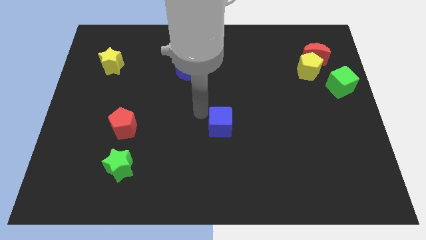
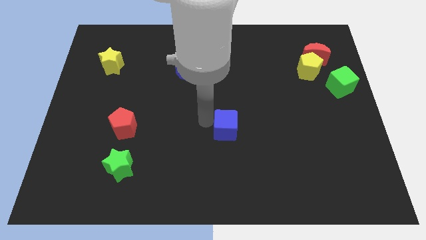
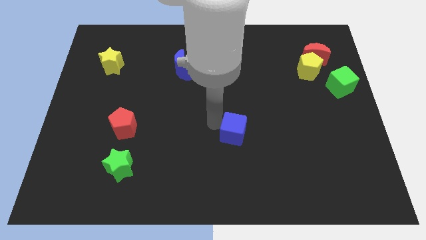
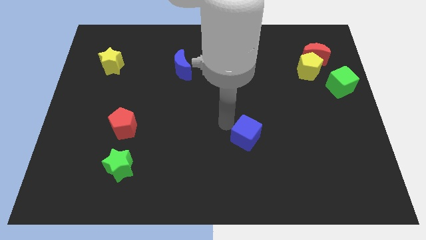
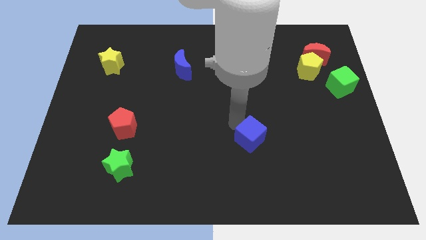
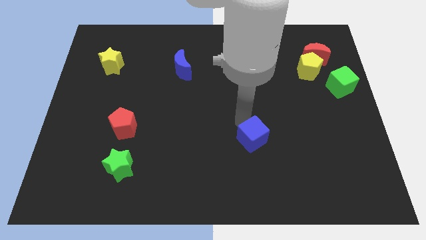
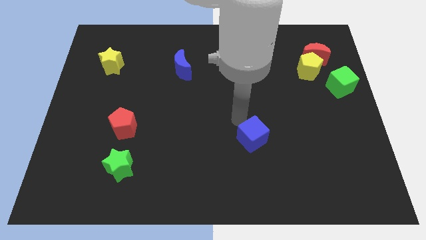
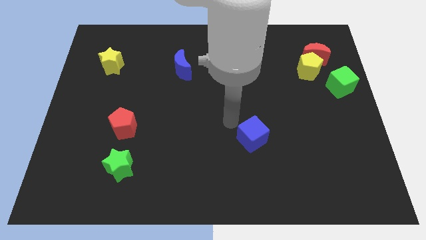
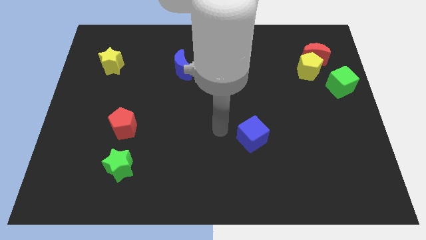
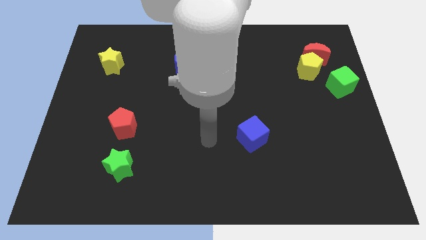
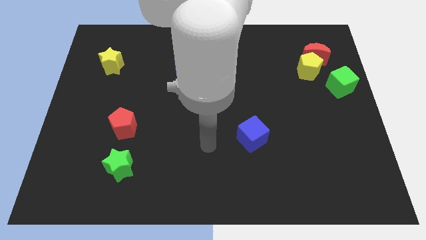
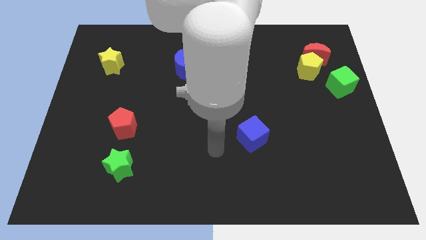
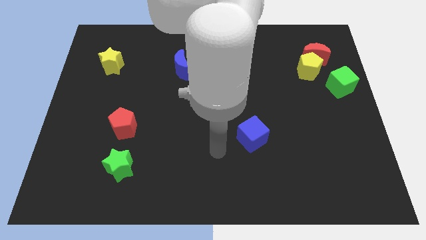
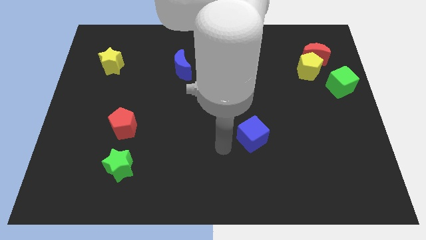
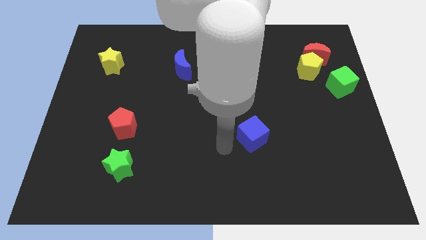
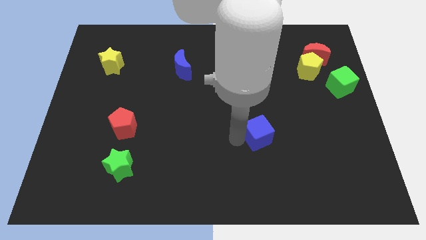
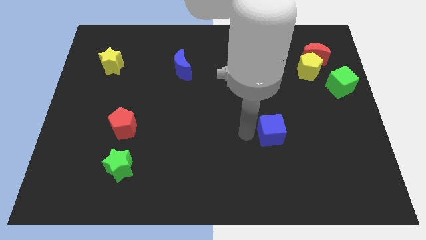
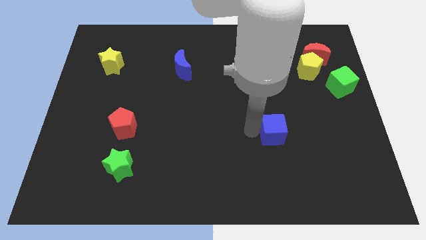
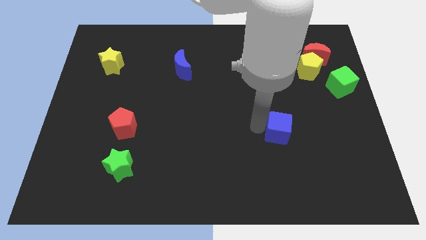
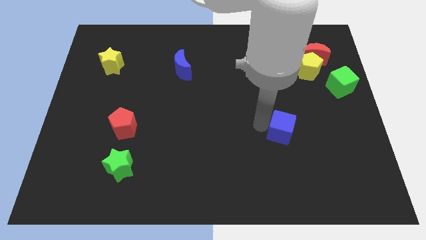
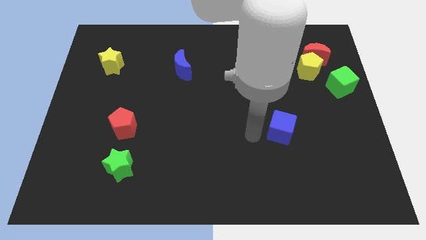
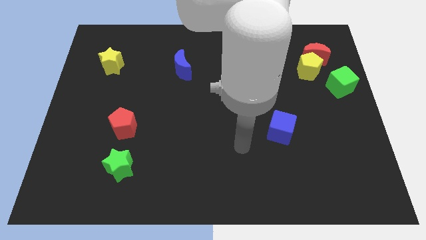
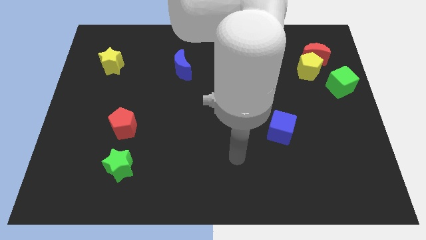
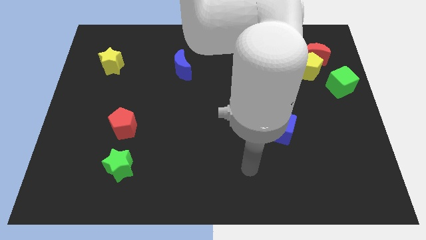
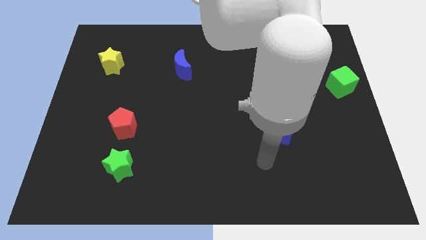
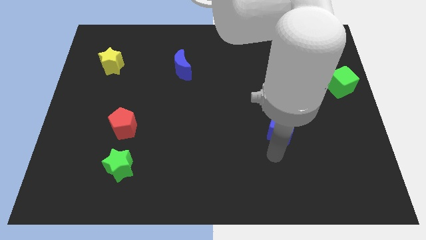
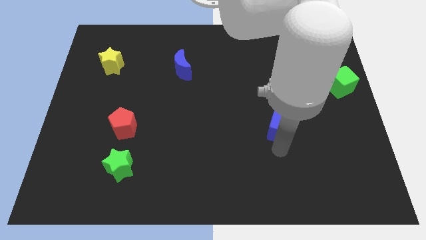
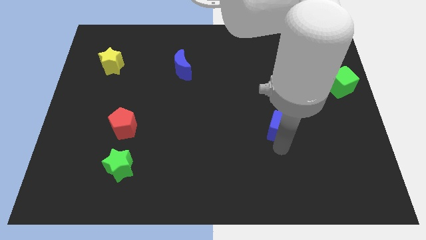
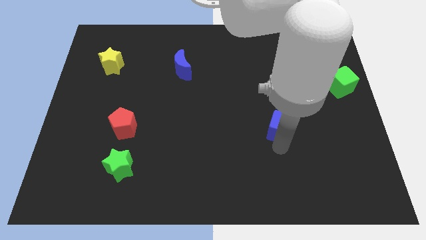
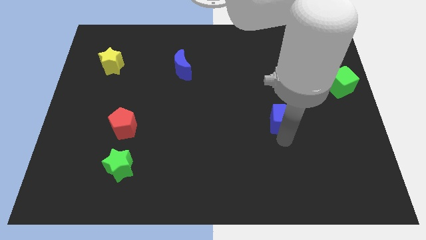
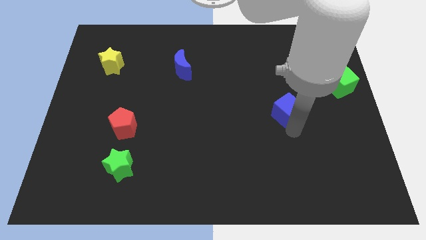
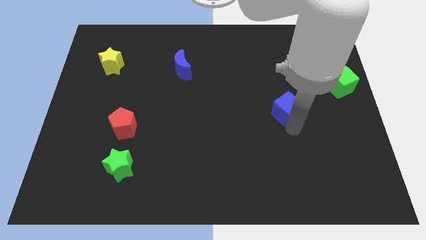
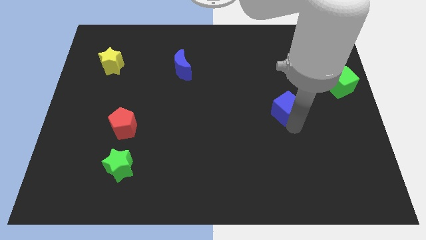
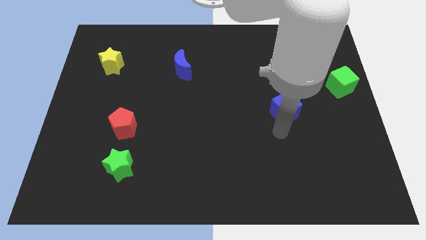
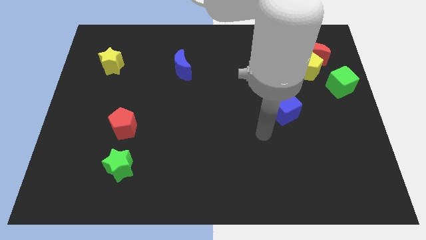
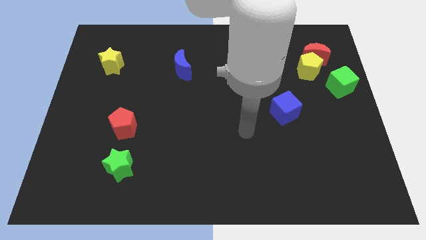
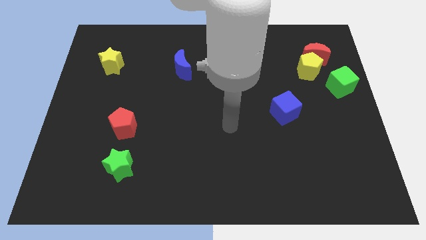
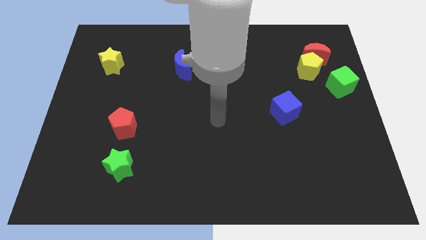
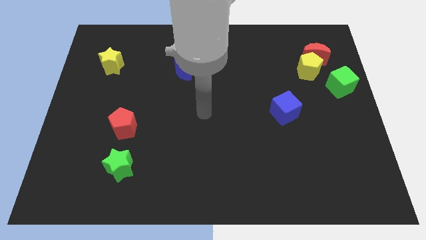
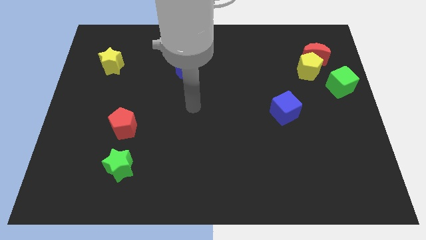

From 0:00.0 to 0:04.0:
move the blue cube towards the yellow pentagon

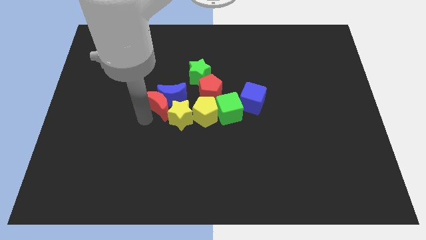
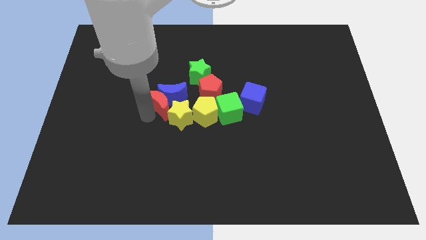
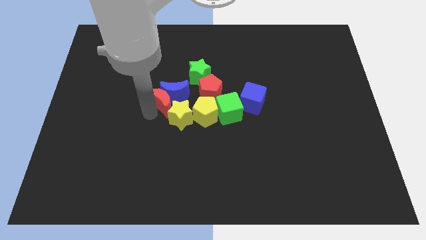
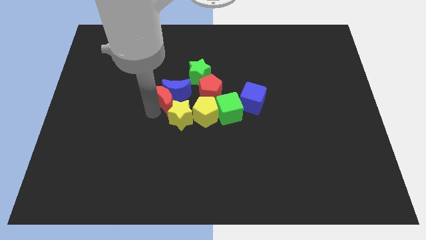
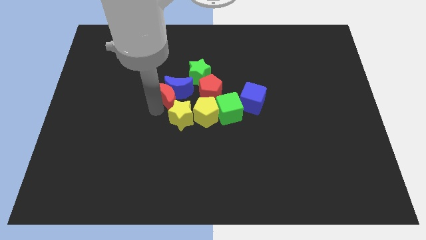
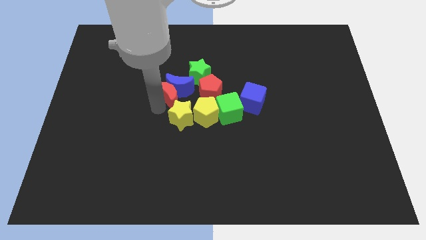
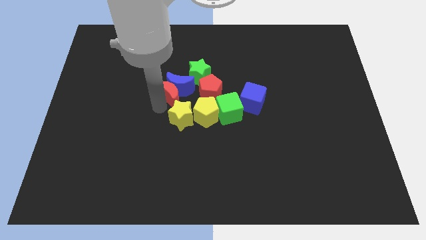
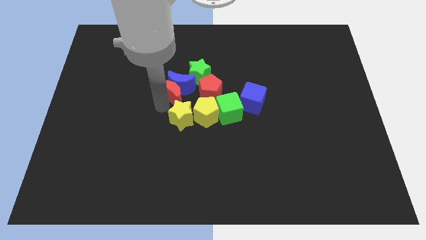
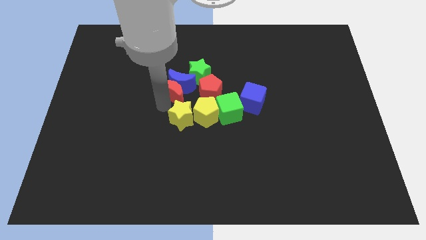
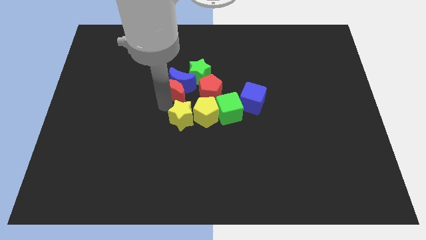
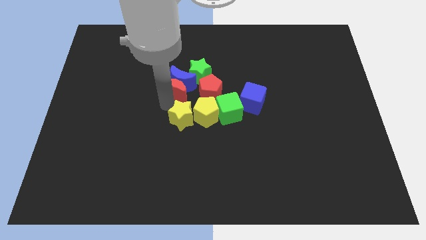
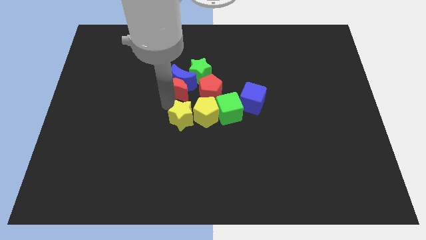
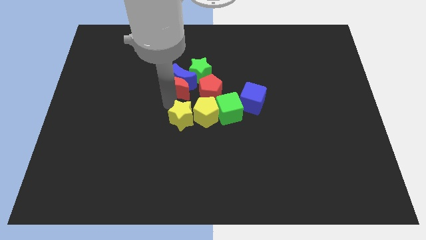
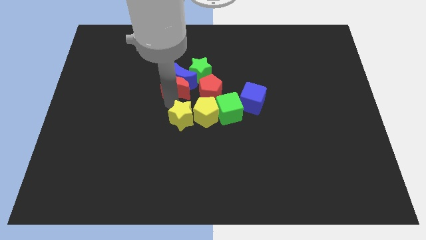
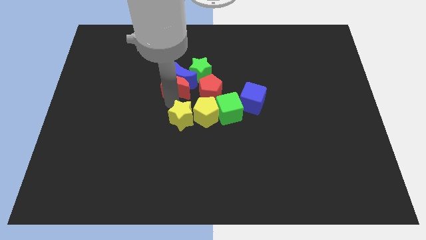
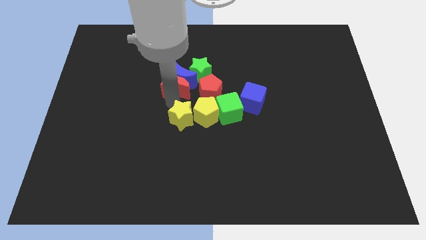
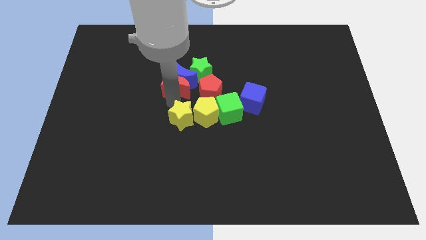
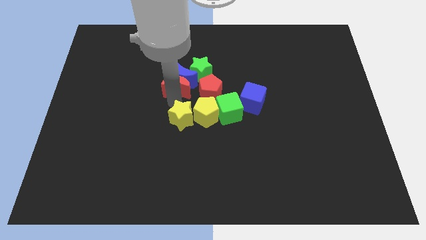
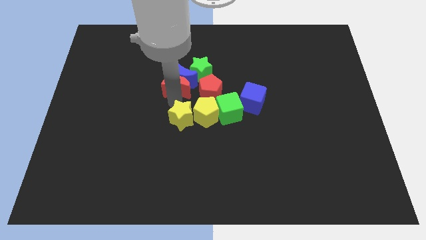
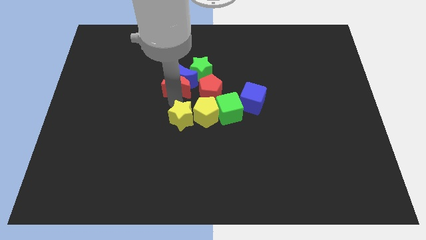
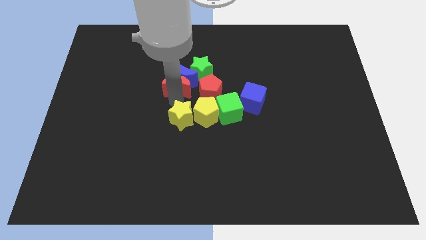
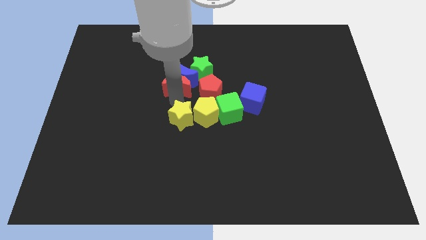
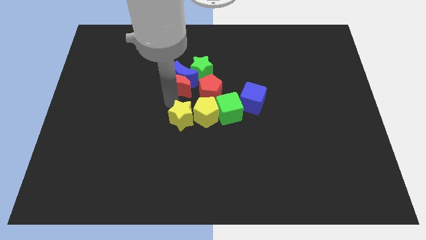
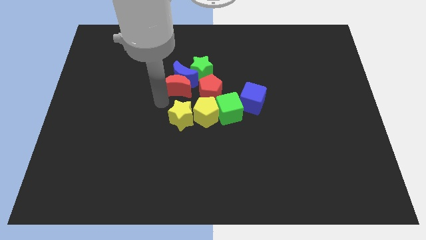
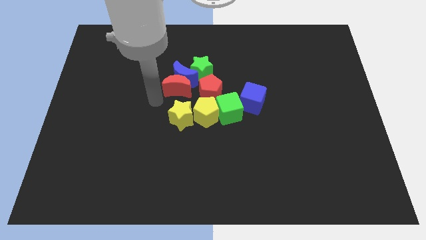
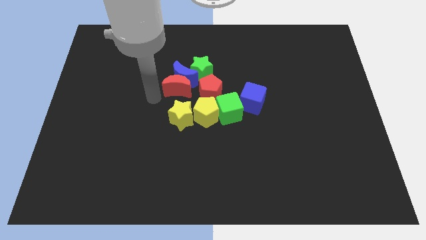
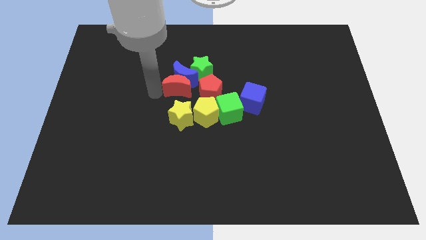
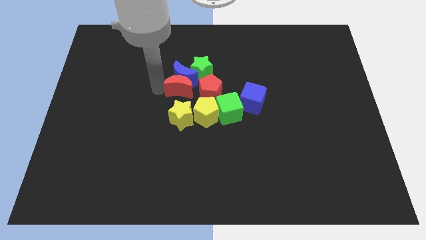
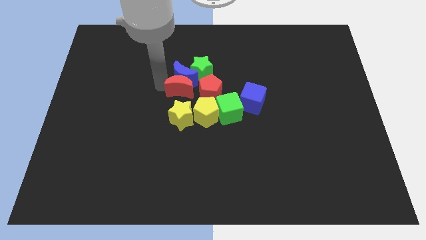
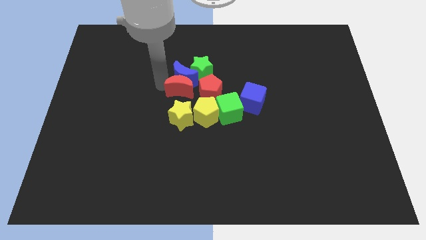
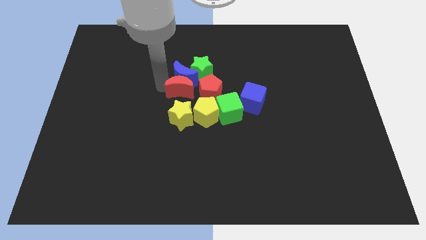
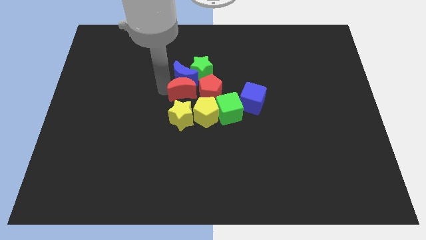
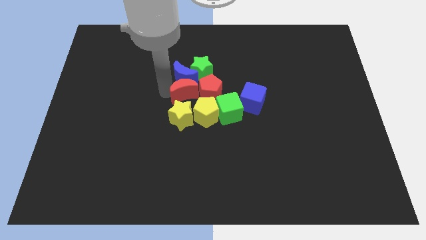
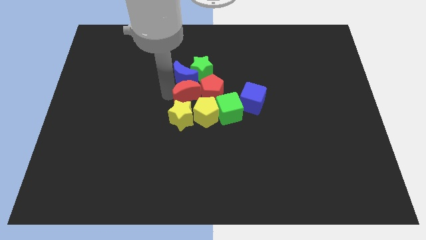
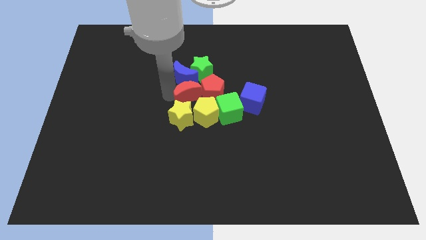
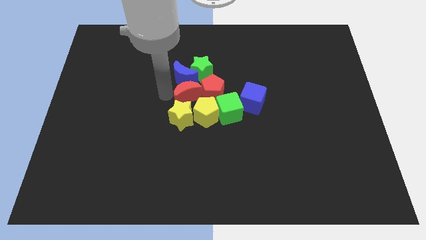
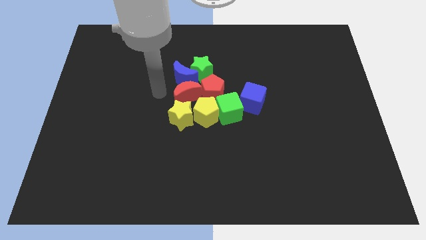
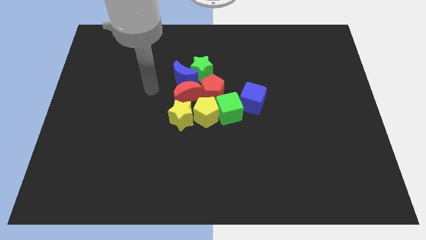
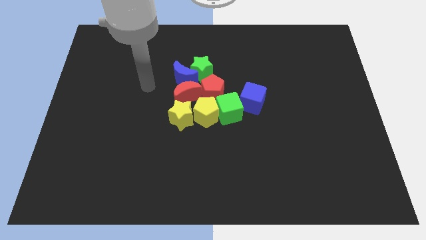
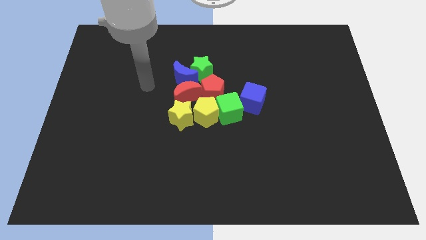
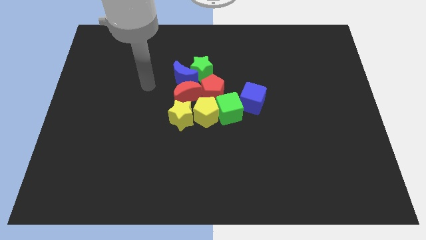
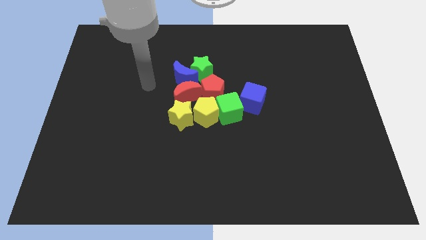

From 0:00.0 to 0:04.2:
place the blue crescent and red crescent to the top of the yellow star

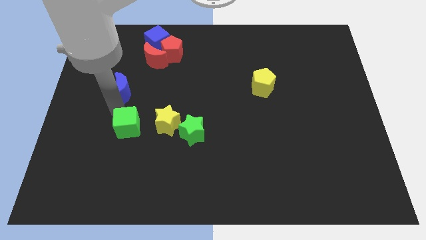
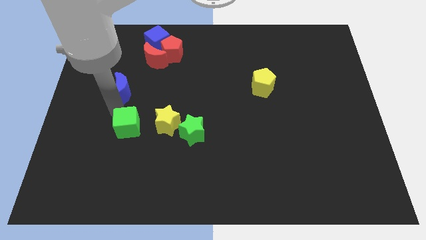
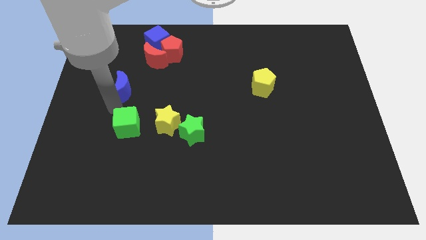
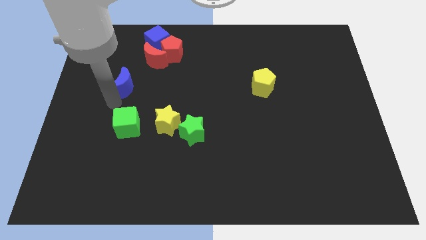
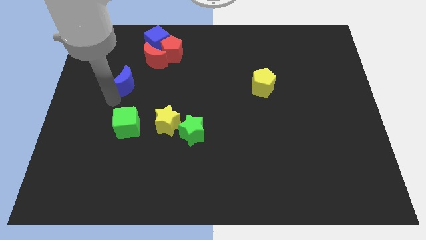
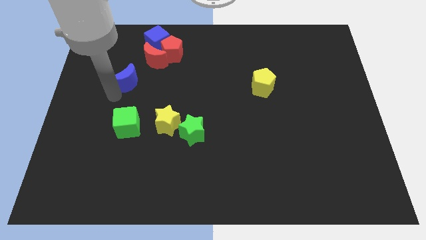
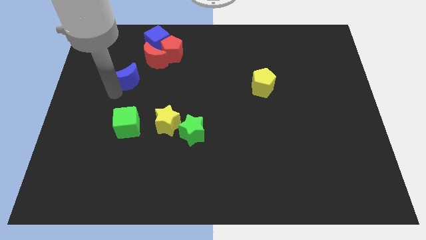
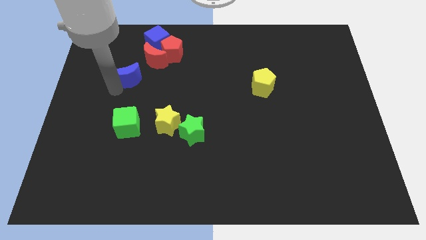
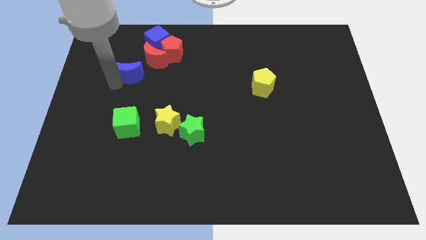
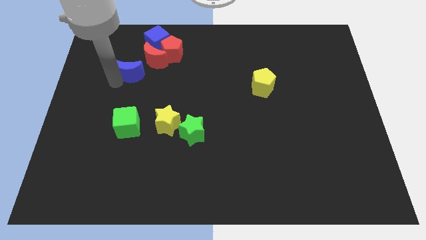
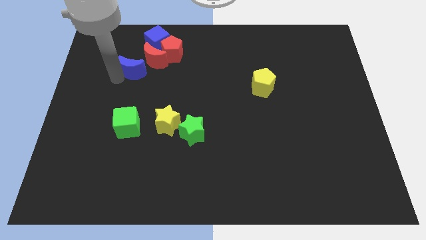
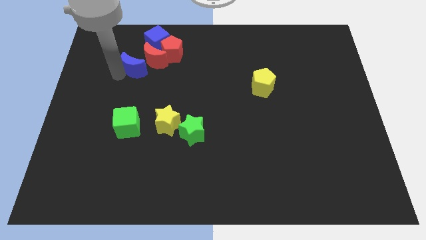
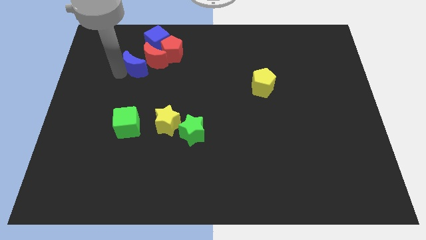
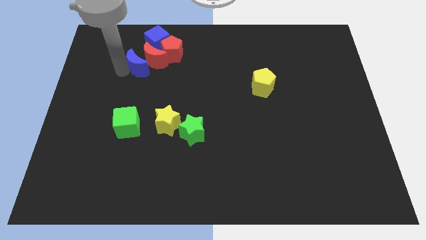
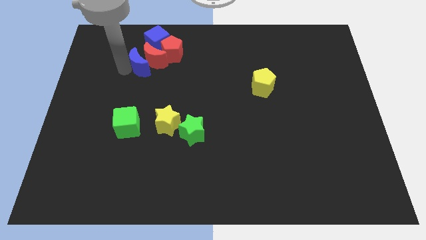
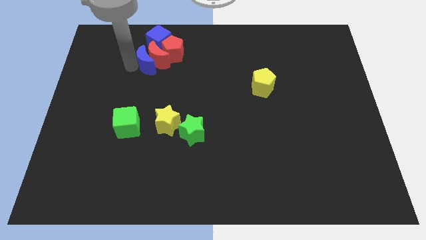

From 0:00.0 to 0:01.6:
move the blue crescent into the red crescent
